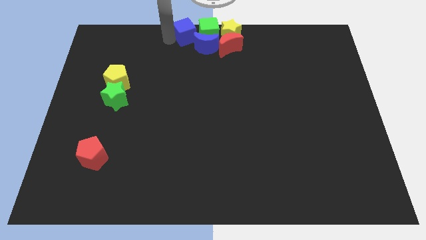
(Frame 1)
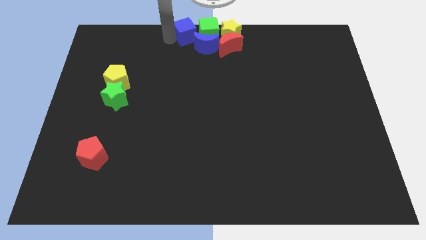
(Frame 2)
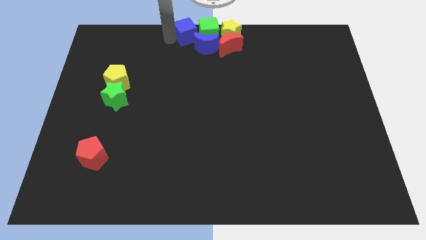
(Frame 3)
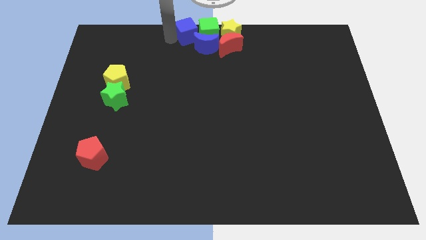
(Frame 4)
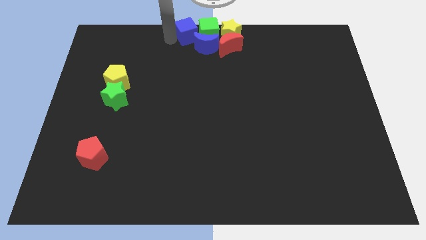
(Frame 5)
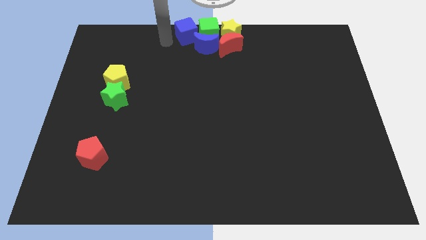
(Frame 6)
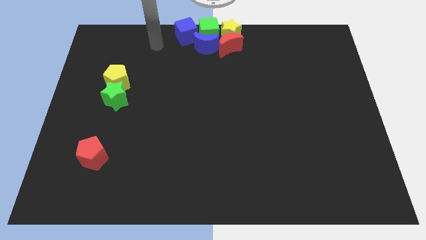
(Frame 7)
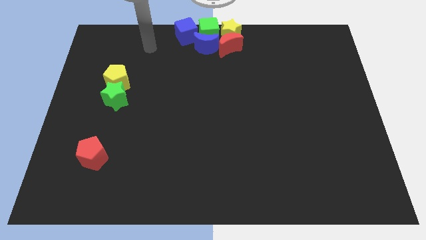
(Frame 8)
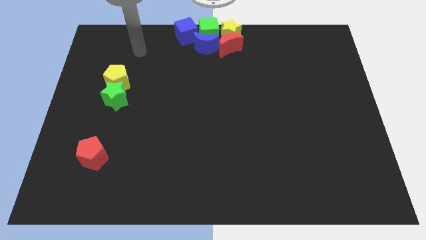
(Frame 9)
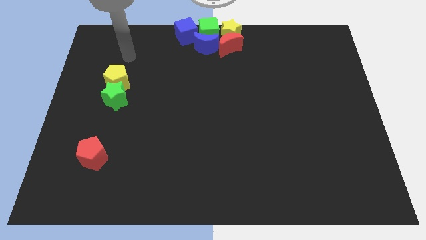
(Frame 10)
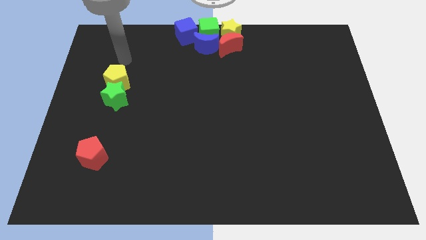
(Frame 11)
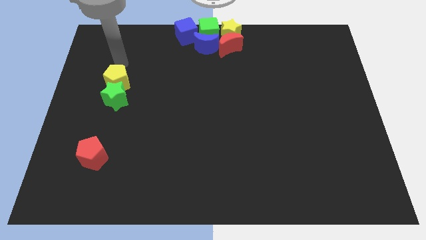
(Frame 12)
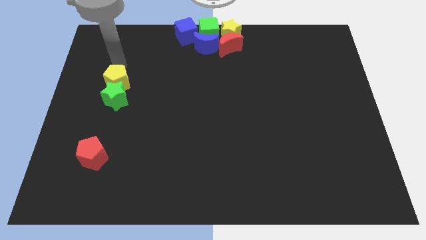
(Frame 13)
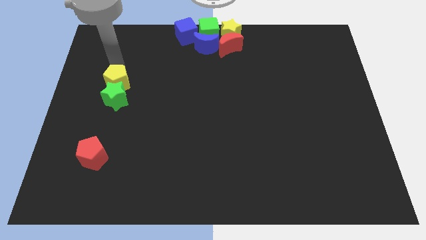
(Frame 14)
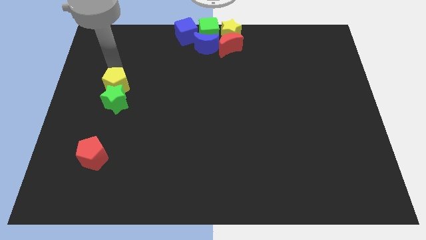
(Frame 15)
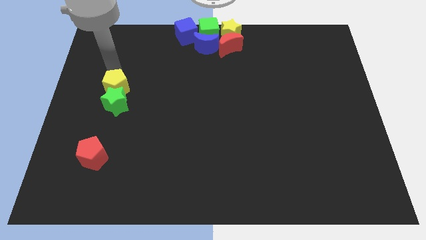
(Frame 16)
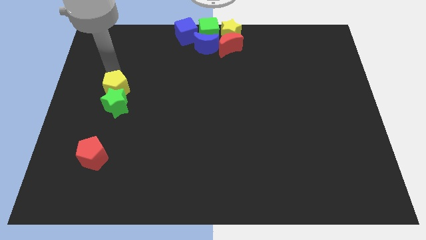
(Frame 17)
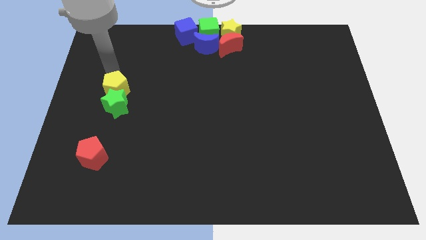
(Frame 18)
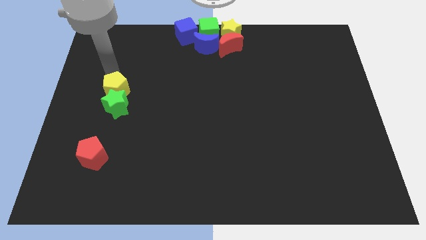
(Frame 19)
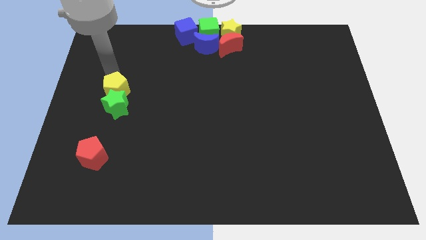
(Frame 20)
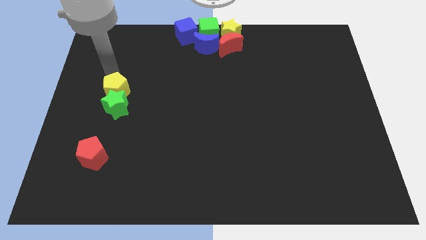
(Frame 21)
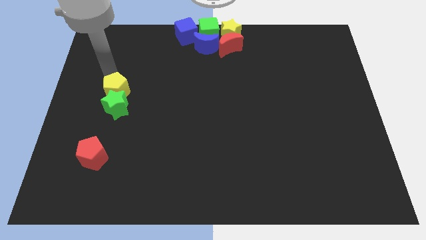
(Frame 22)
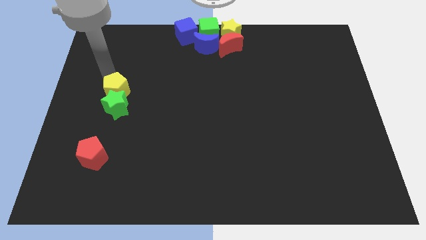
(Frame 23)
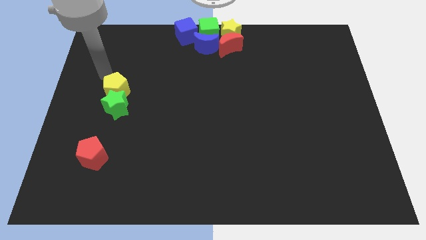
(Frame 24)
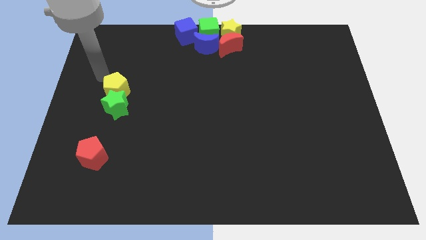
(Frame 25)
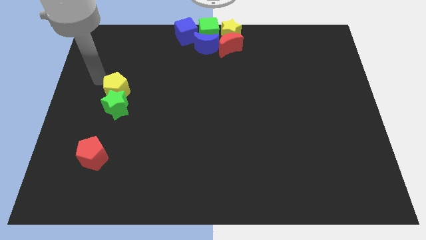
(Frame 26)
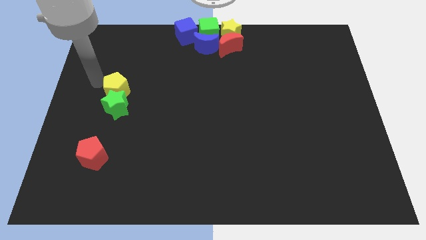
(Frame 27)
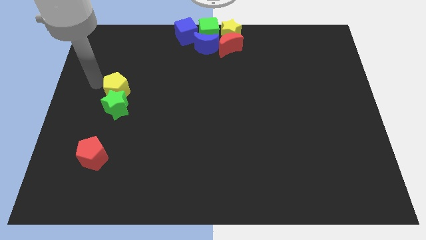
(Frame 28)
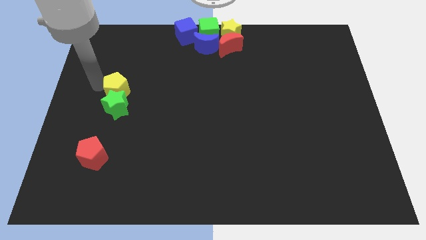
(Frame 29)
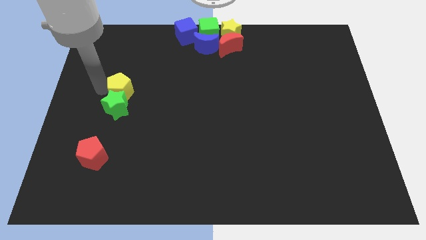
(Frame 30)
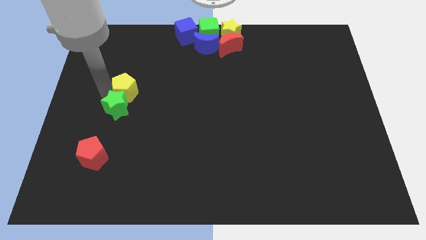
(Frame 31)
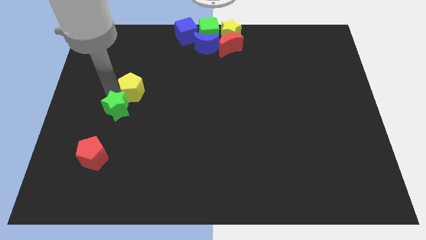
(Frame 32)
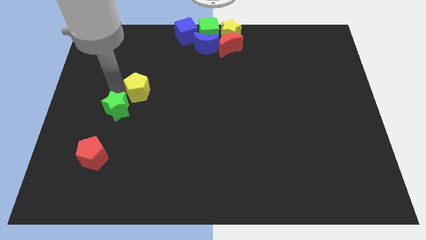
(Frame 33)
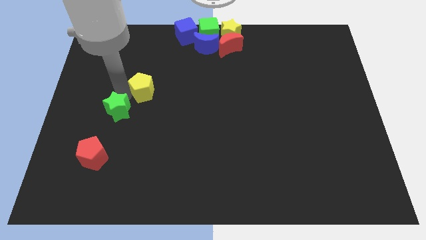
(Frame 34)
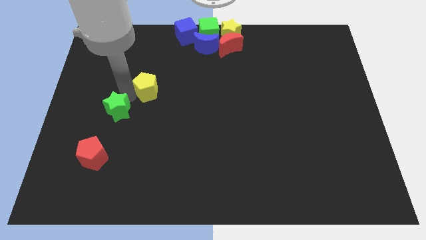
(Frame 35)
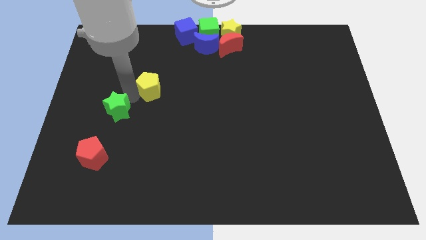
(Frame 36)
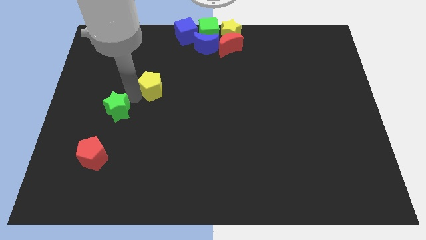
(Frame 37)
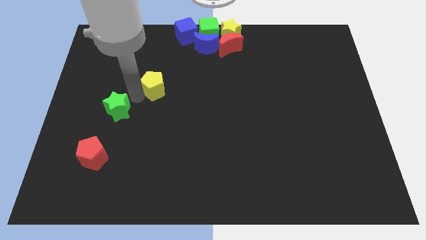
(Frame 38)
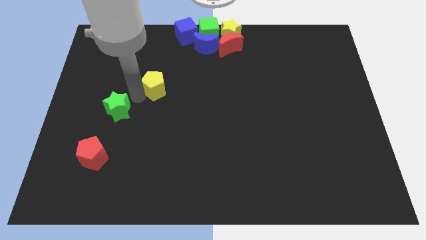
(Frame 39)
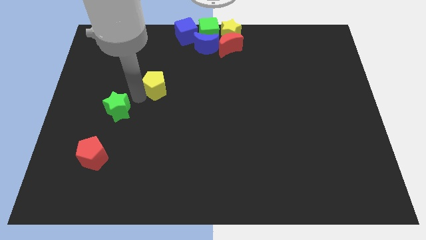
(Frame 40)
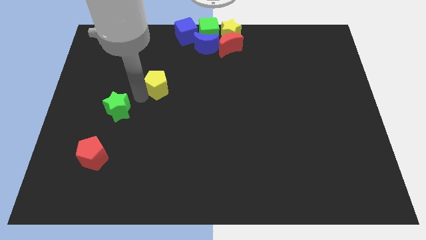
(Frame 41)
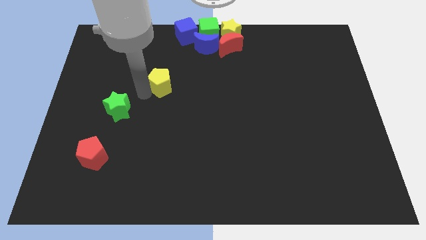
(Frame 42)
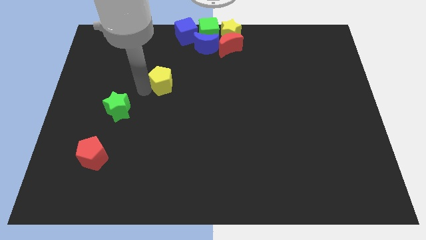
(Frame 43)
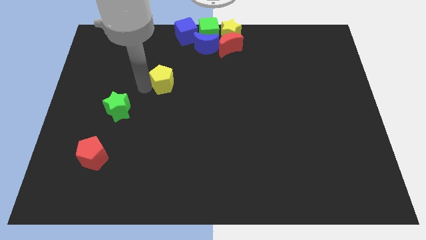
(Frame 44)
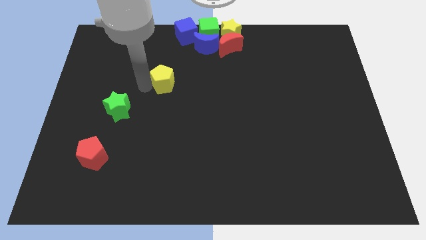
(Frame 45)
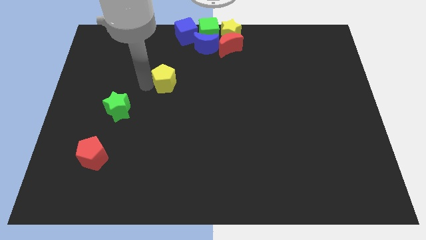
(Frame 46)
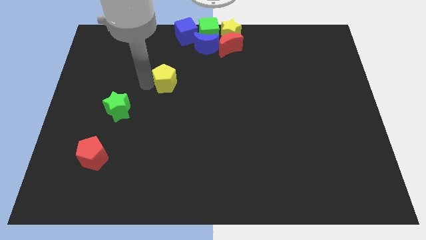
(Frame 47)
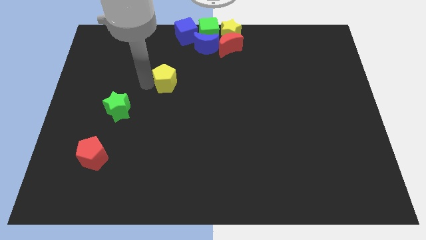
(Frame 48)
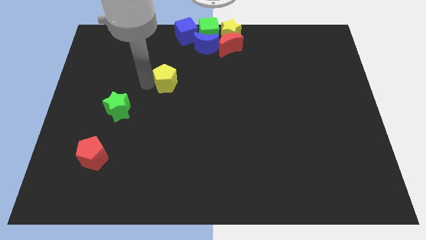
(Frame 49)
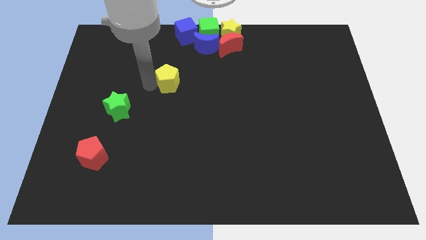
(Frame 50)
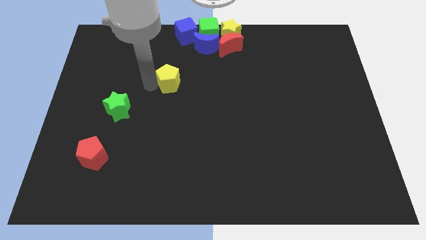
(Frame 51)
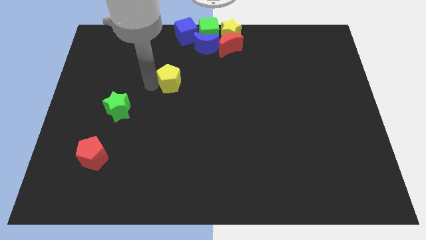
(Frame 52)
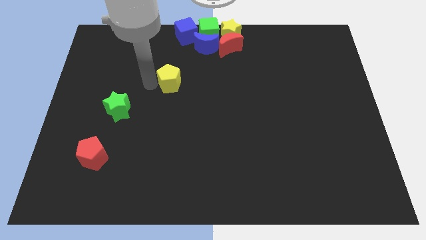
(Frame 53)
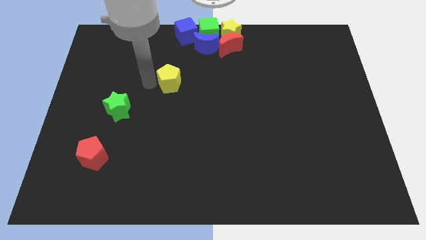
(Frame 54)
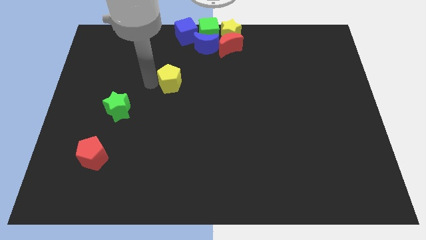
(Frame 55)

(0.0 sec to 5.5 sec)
separate the green star and yellow pentagon

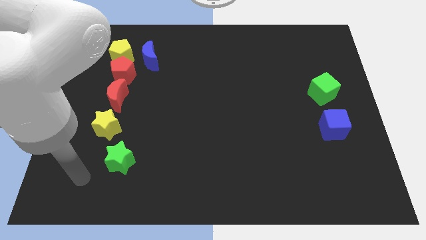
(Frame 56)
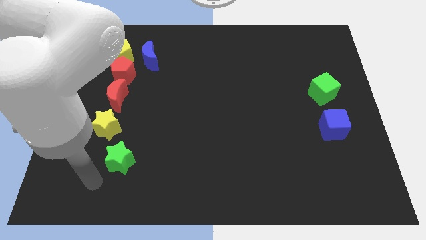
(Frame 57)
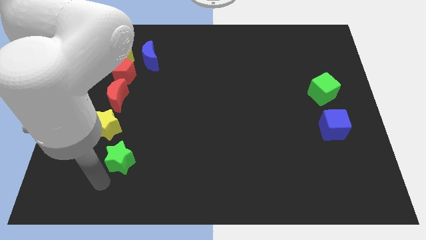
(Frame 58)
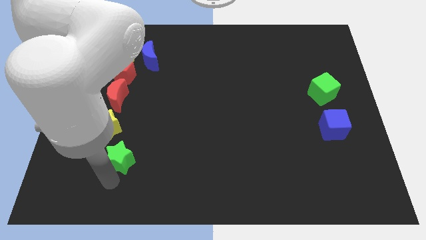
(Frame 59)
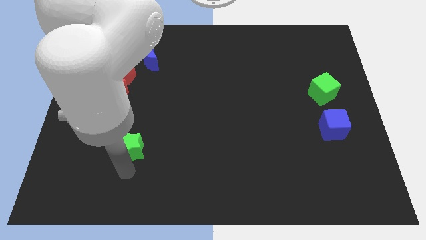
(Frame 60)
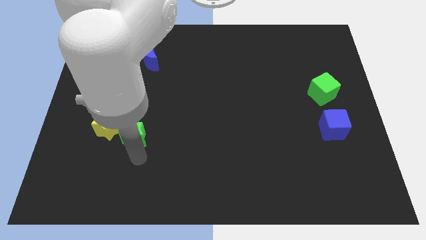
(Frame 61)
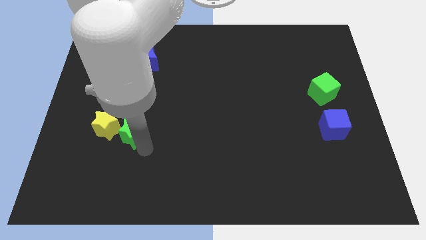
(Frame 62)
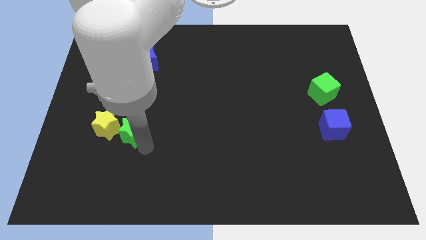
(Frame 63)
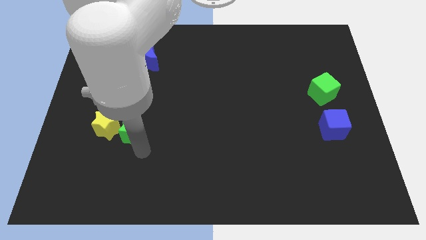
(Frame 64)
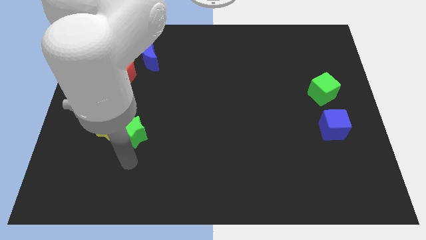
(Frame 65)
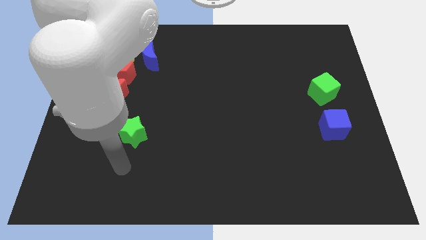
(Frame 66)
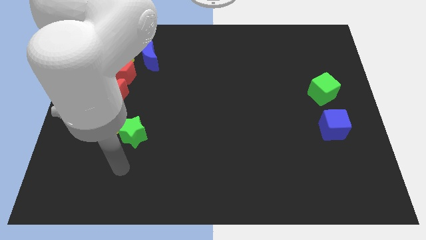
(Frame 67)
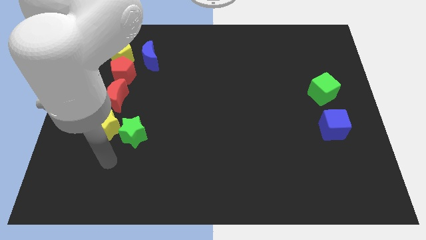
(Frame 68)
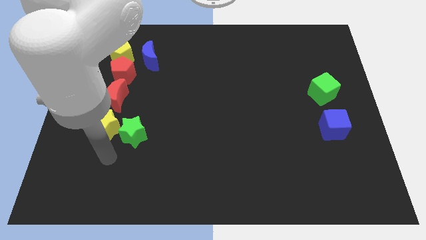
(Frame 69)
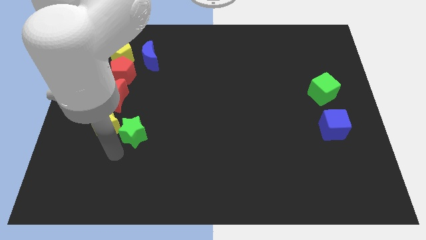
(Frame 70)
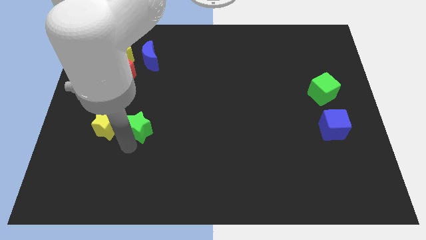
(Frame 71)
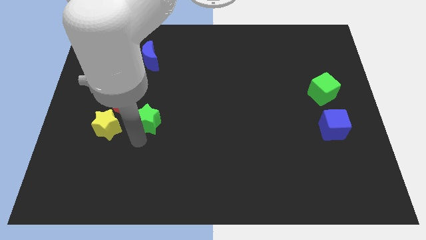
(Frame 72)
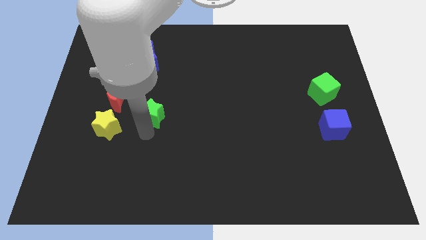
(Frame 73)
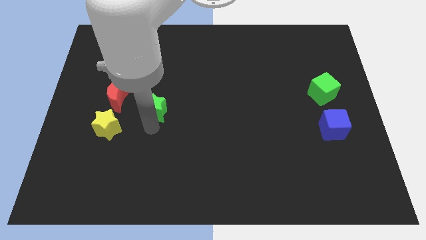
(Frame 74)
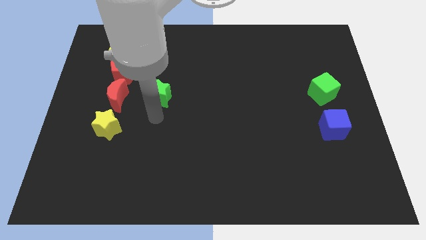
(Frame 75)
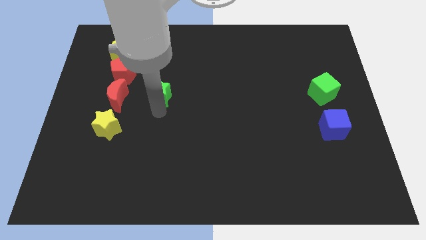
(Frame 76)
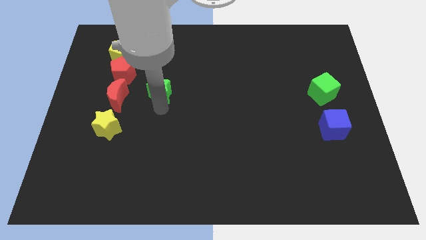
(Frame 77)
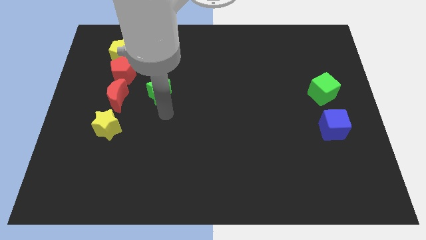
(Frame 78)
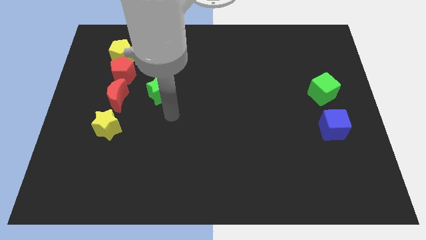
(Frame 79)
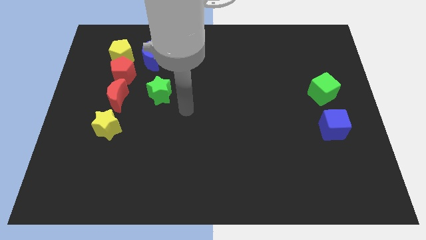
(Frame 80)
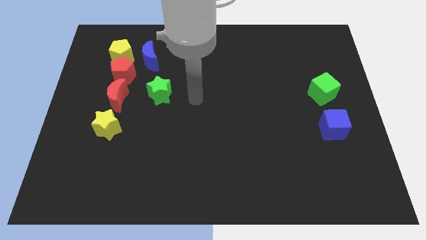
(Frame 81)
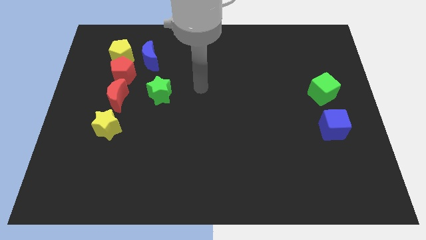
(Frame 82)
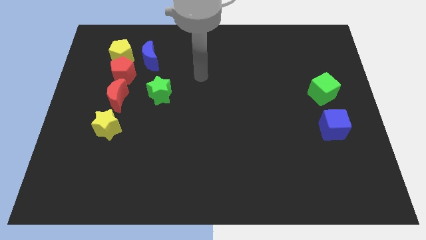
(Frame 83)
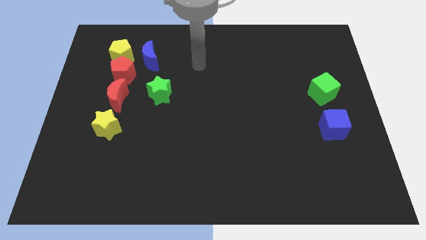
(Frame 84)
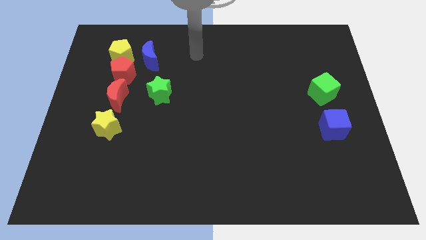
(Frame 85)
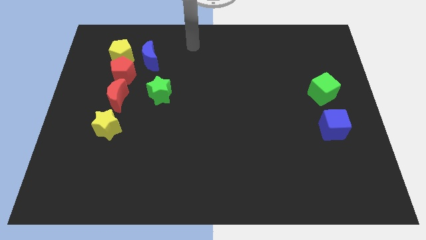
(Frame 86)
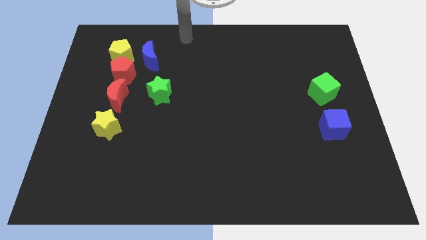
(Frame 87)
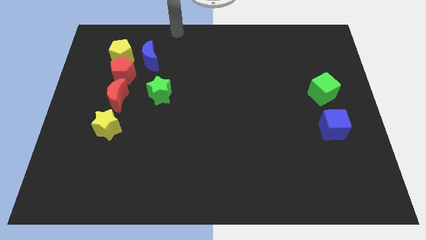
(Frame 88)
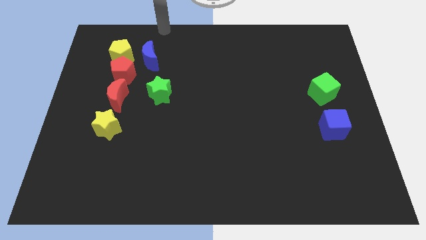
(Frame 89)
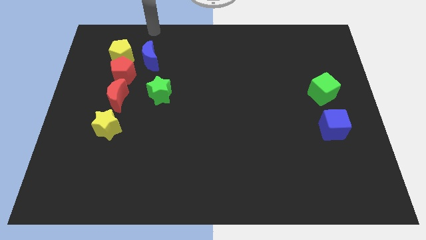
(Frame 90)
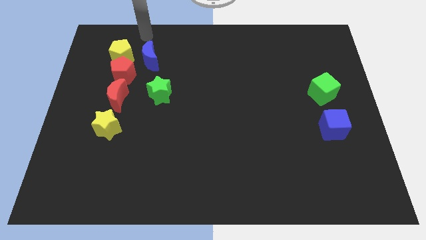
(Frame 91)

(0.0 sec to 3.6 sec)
push green star towards blue moon
